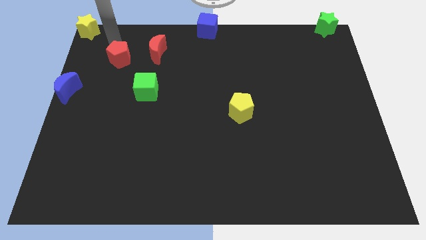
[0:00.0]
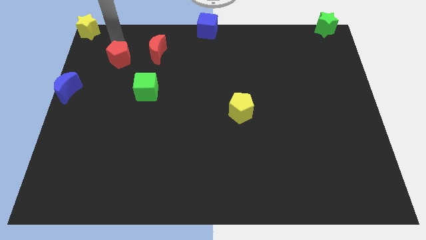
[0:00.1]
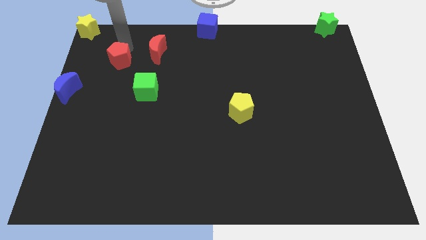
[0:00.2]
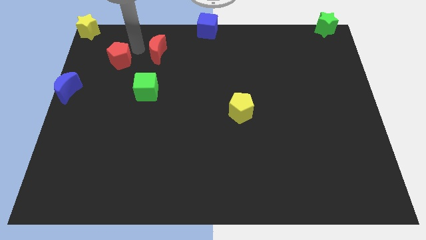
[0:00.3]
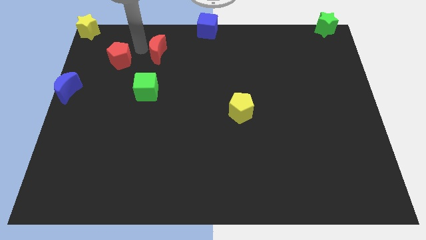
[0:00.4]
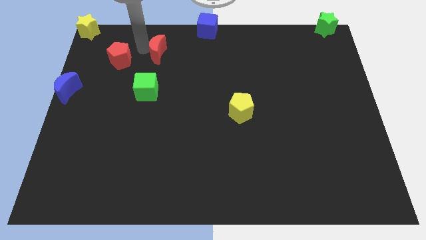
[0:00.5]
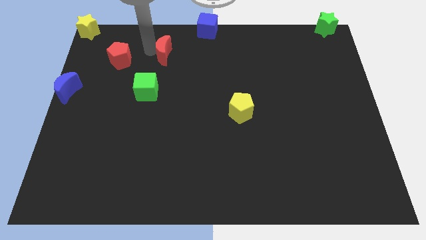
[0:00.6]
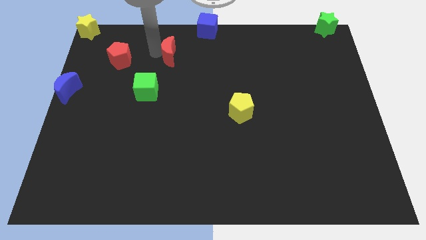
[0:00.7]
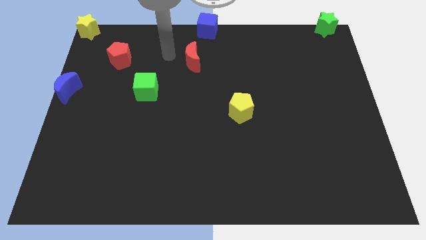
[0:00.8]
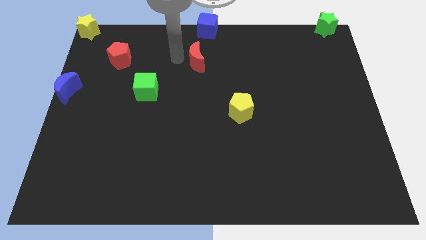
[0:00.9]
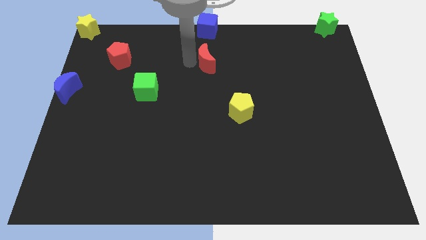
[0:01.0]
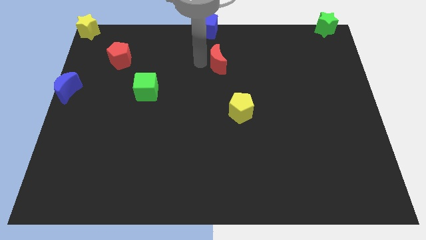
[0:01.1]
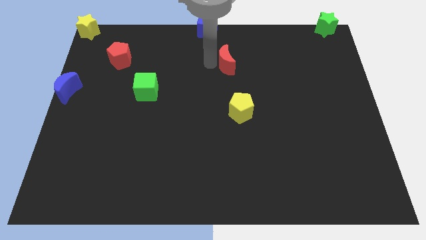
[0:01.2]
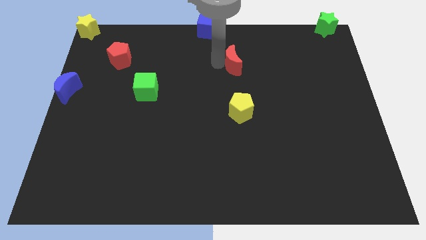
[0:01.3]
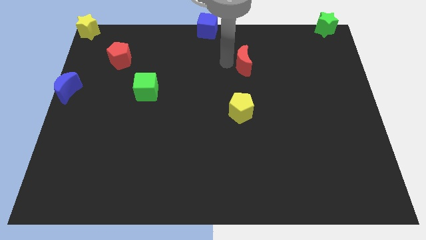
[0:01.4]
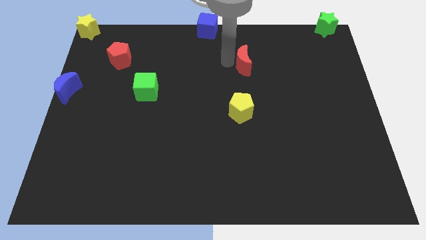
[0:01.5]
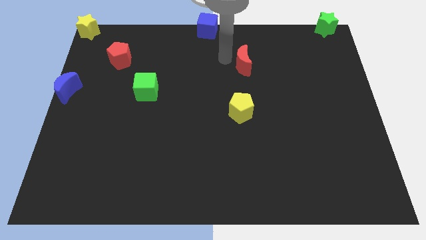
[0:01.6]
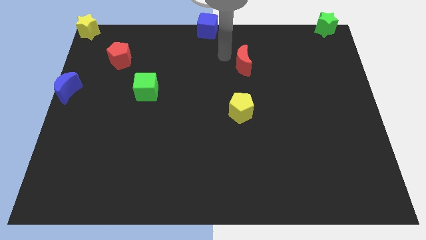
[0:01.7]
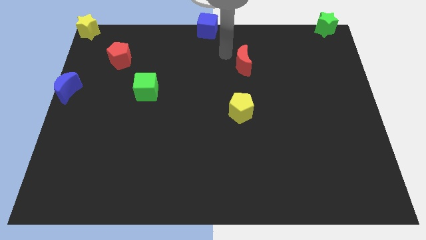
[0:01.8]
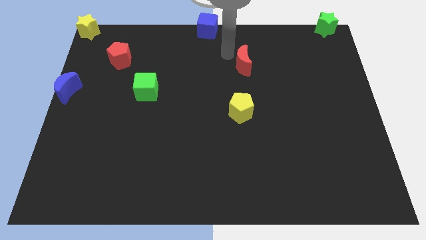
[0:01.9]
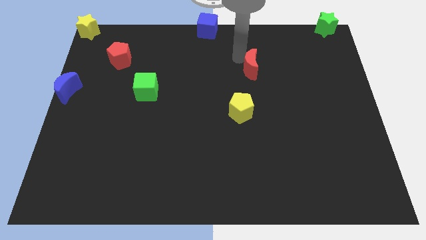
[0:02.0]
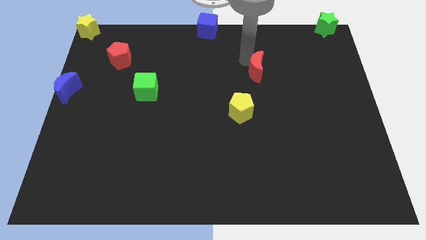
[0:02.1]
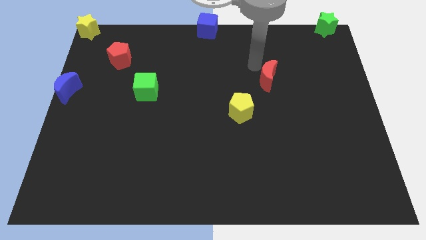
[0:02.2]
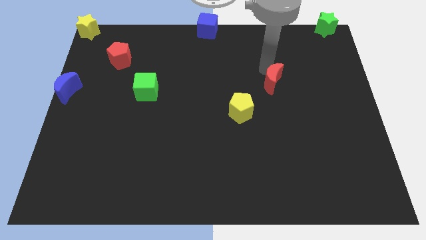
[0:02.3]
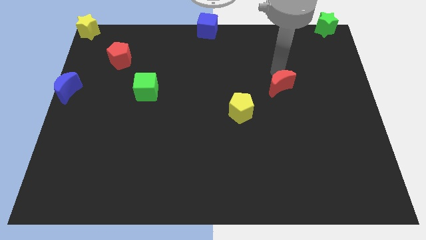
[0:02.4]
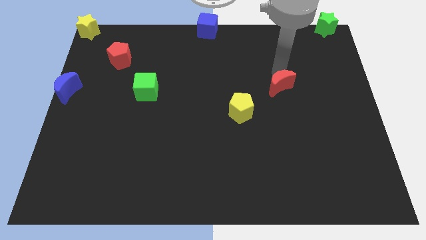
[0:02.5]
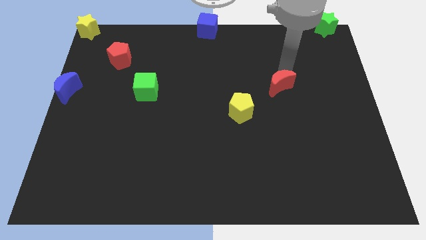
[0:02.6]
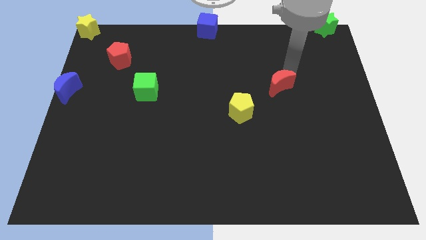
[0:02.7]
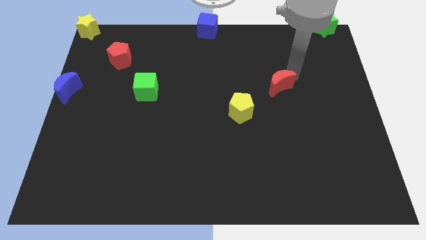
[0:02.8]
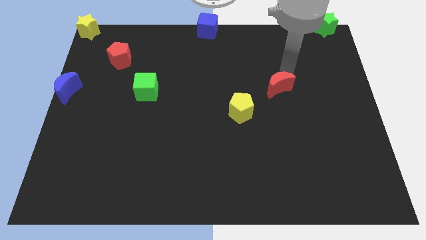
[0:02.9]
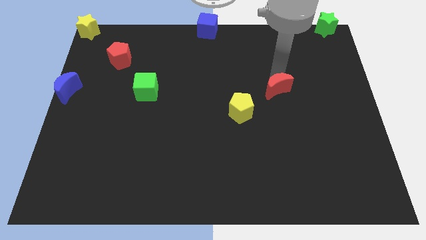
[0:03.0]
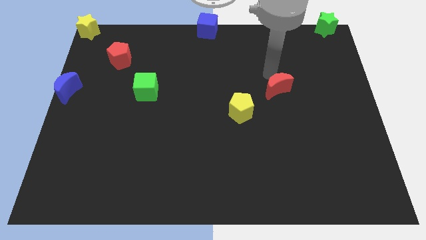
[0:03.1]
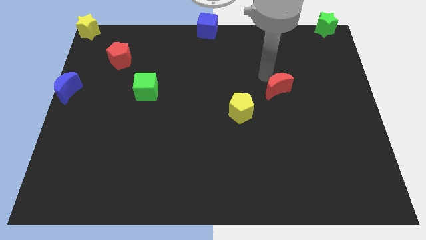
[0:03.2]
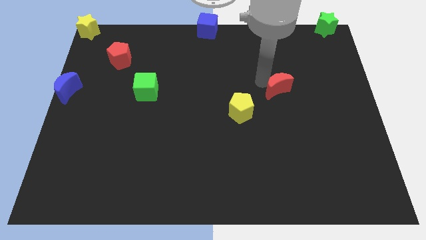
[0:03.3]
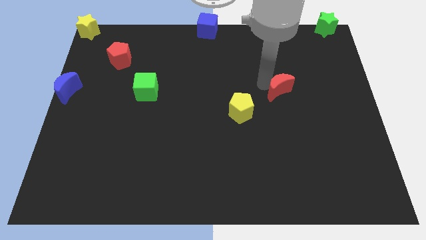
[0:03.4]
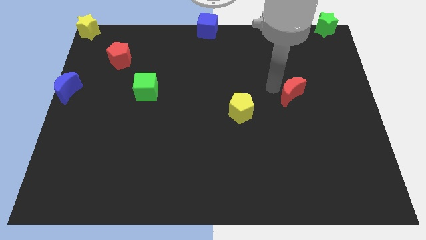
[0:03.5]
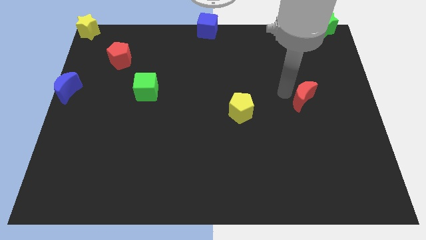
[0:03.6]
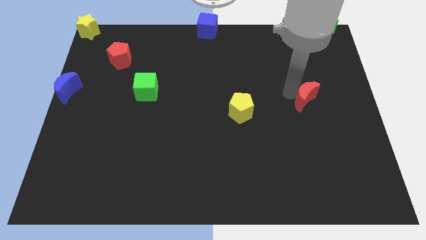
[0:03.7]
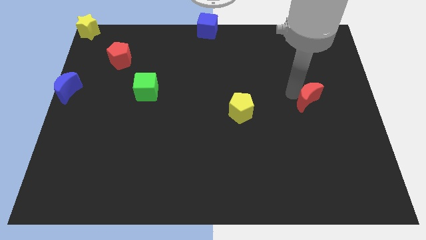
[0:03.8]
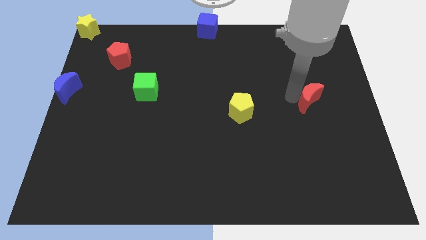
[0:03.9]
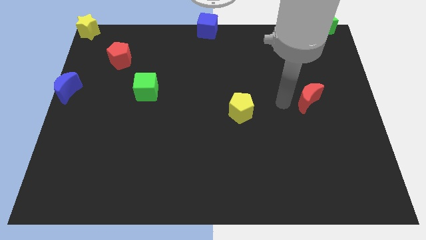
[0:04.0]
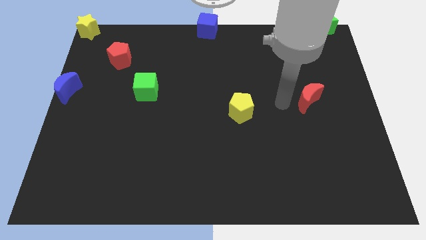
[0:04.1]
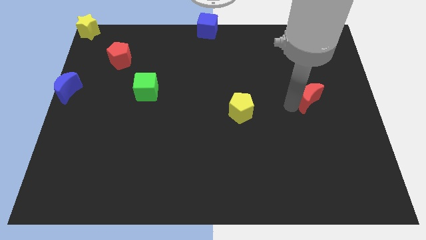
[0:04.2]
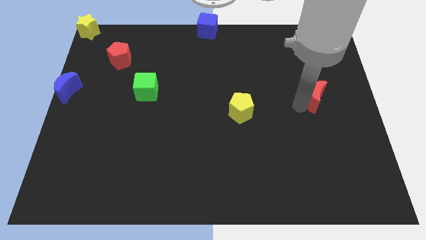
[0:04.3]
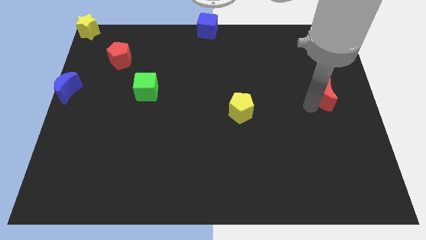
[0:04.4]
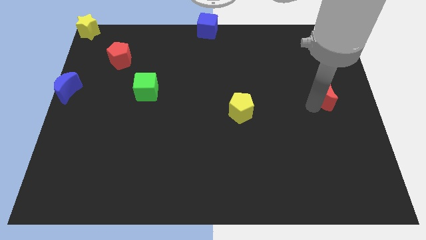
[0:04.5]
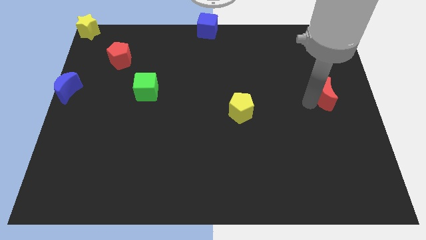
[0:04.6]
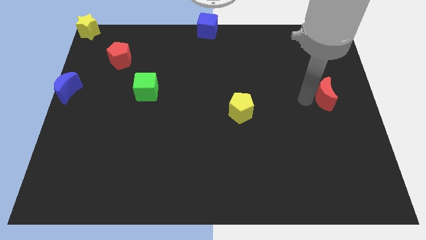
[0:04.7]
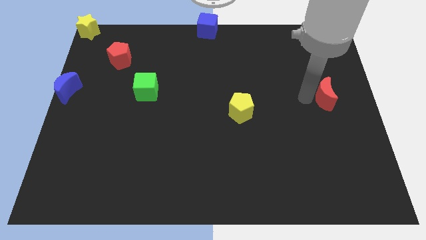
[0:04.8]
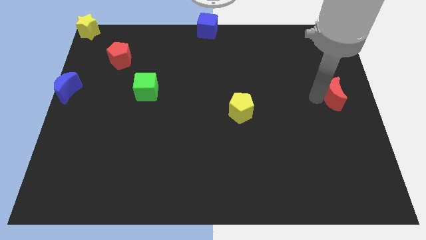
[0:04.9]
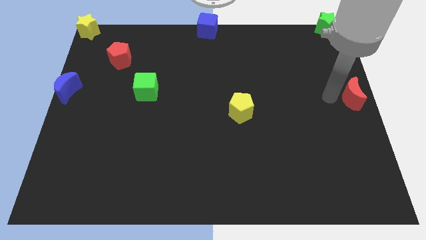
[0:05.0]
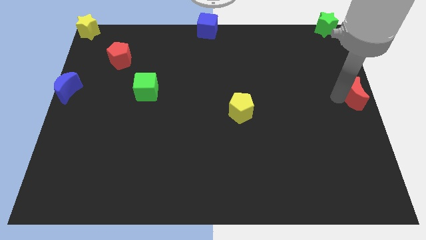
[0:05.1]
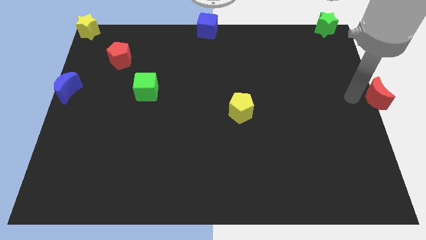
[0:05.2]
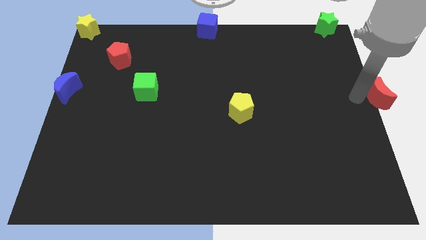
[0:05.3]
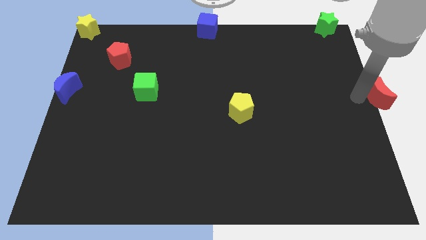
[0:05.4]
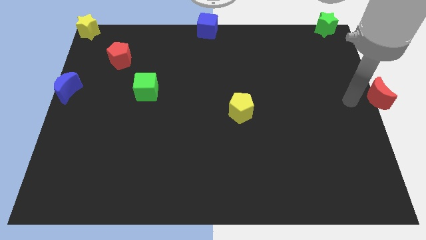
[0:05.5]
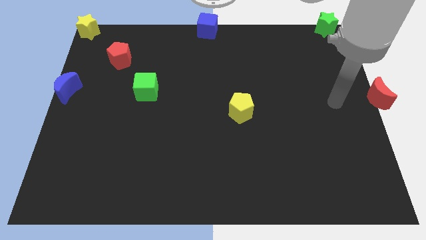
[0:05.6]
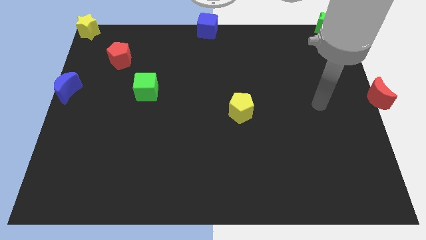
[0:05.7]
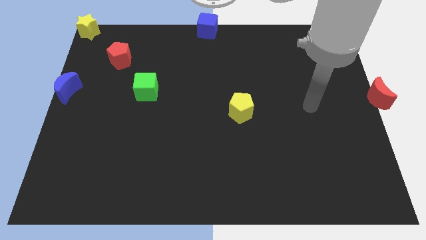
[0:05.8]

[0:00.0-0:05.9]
push red moon towards center right edge of the board

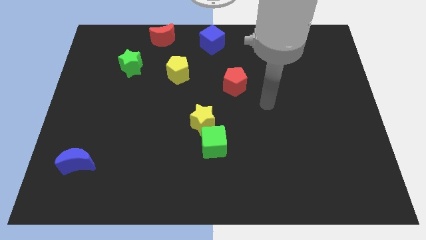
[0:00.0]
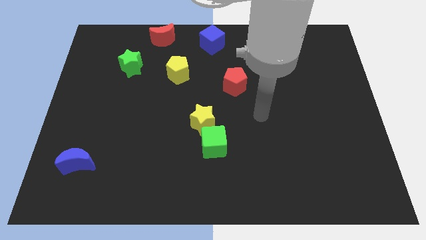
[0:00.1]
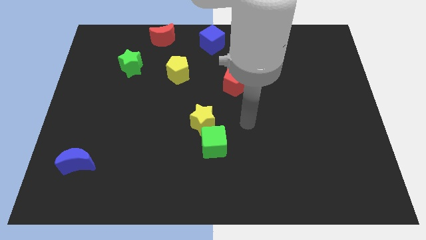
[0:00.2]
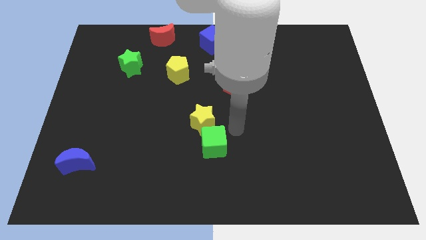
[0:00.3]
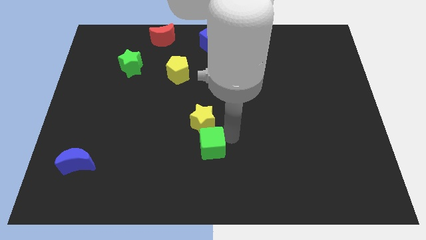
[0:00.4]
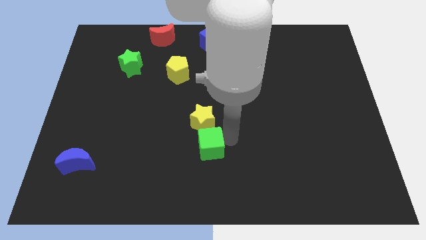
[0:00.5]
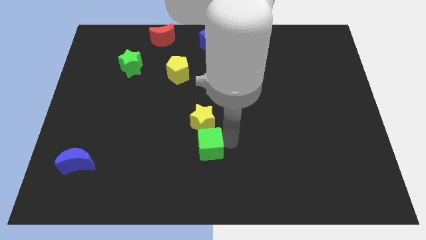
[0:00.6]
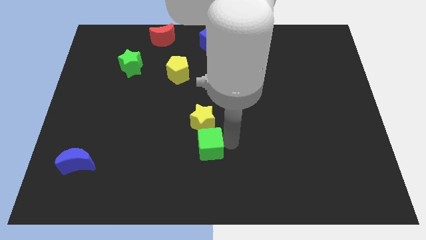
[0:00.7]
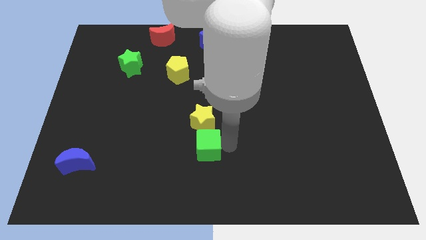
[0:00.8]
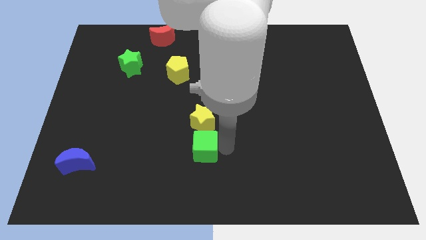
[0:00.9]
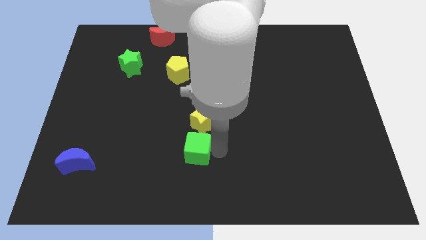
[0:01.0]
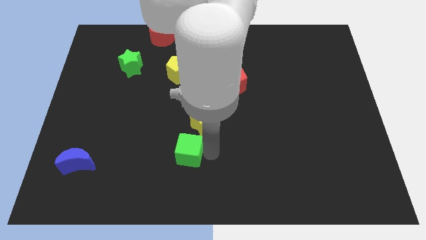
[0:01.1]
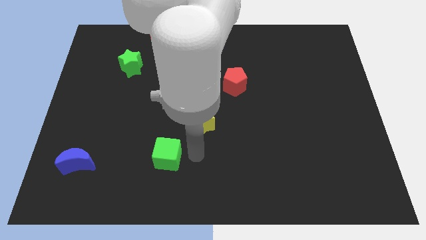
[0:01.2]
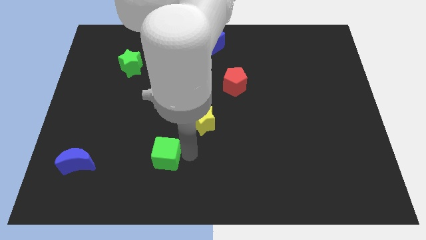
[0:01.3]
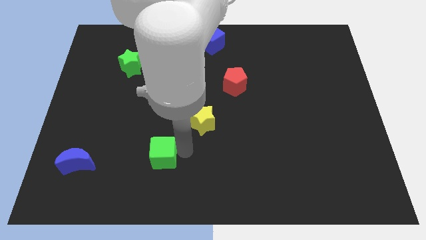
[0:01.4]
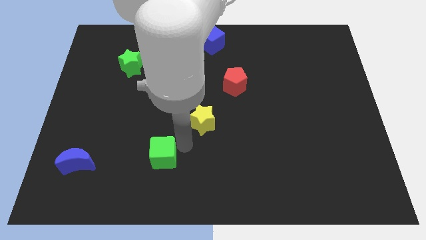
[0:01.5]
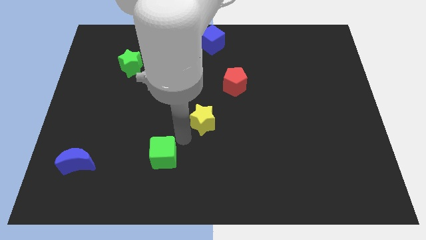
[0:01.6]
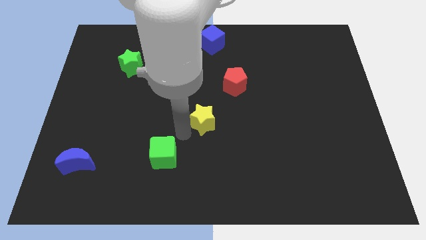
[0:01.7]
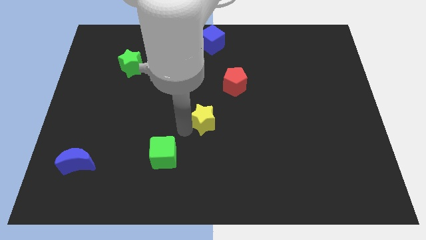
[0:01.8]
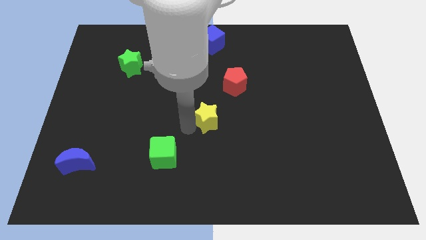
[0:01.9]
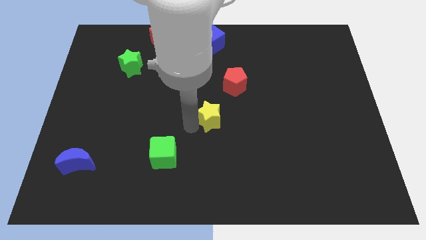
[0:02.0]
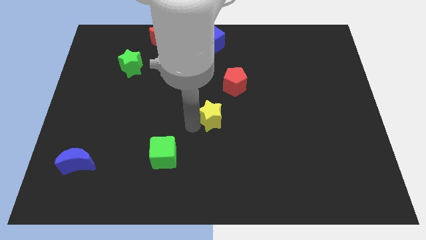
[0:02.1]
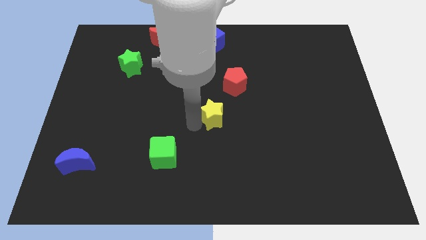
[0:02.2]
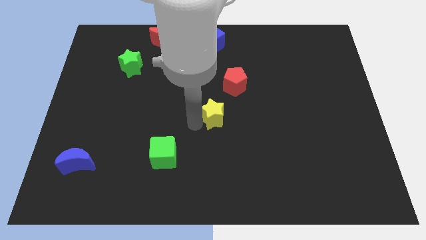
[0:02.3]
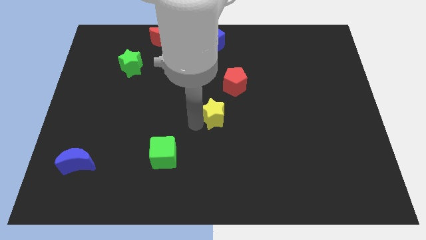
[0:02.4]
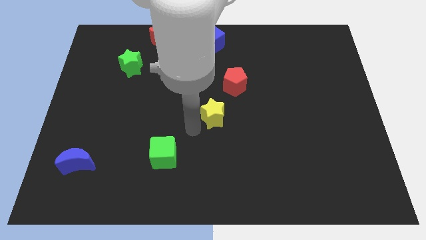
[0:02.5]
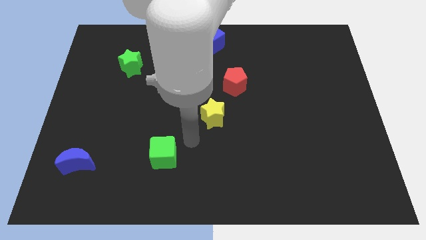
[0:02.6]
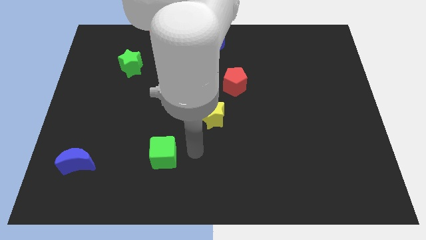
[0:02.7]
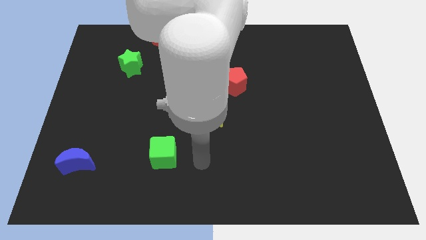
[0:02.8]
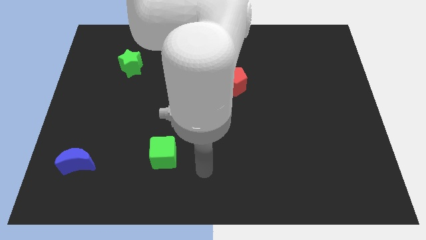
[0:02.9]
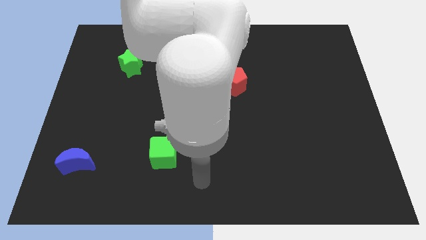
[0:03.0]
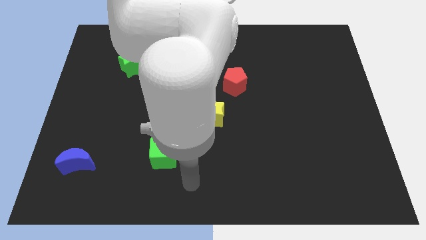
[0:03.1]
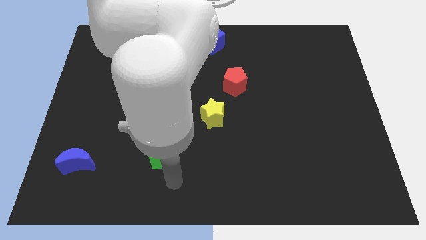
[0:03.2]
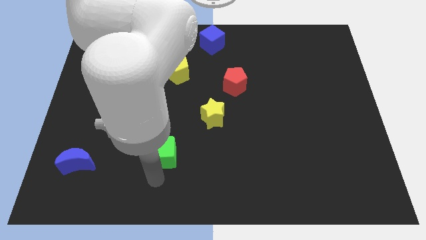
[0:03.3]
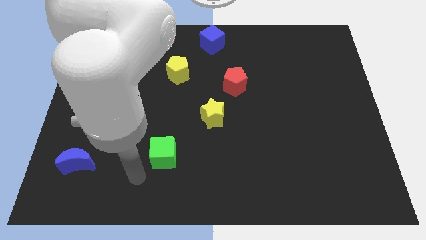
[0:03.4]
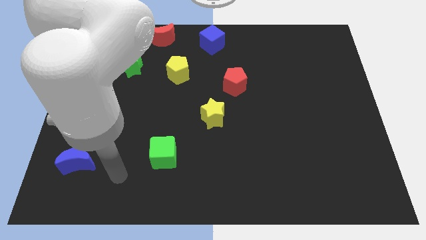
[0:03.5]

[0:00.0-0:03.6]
adjust the yellow star and the green cube to form a diagonal line with red pentagon
